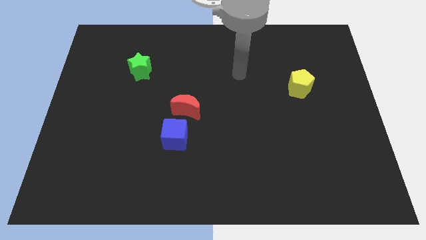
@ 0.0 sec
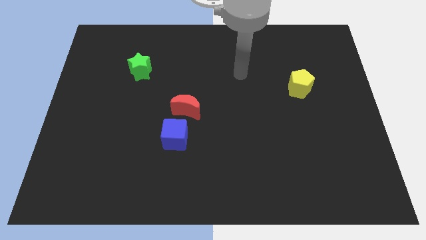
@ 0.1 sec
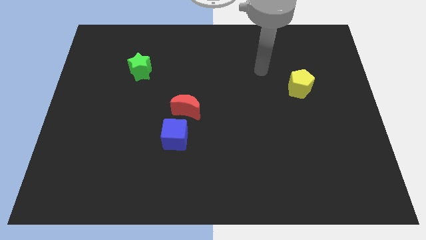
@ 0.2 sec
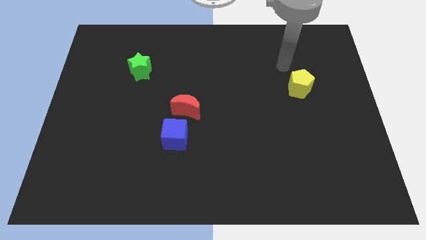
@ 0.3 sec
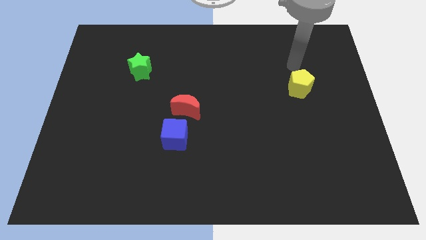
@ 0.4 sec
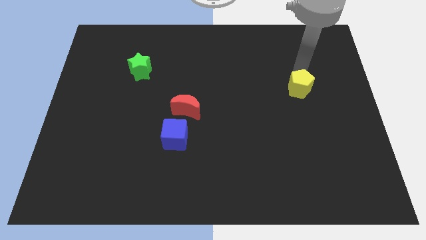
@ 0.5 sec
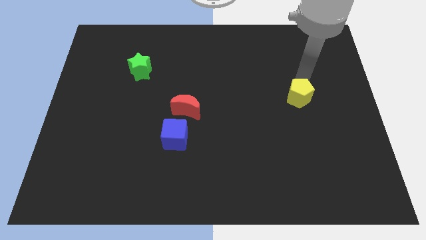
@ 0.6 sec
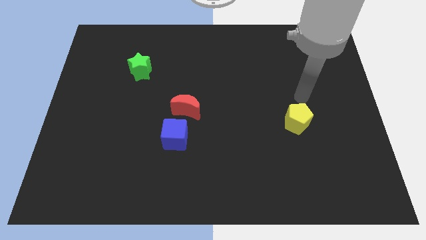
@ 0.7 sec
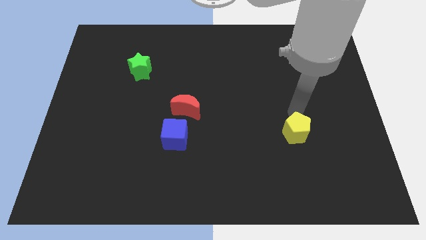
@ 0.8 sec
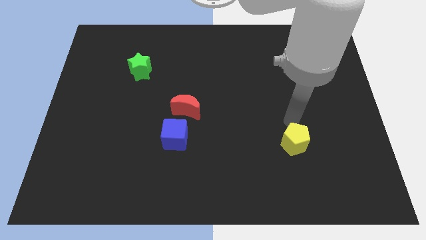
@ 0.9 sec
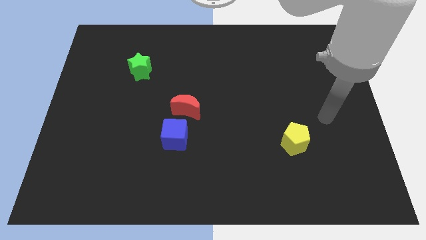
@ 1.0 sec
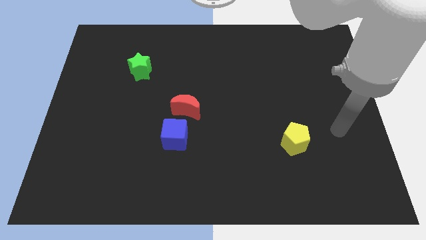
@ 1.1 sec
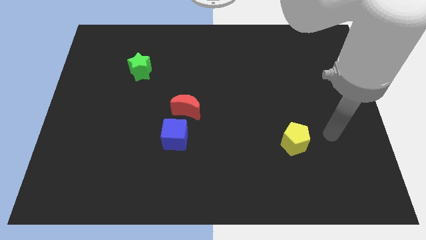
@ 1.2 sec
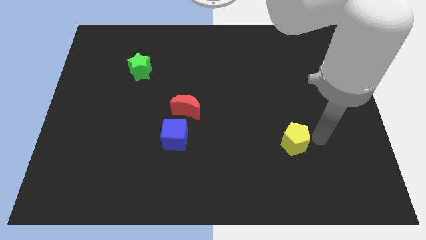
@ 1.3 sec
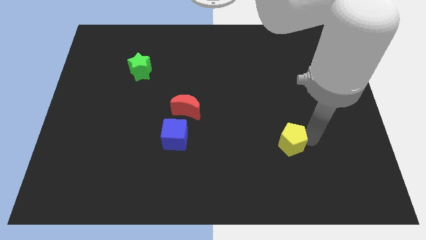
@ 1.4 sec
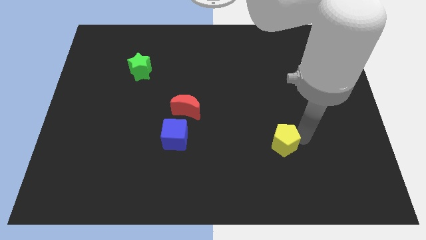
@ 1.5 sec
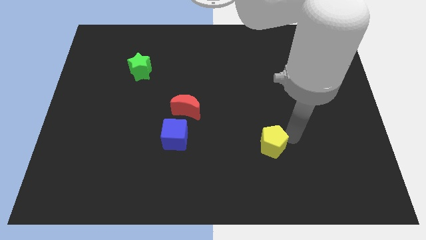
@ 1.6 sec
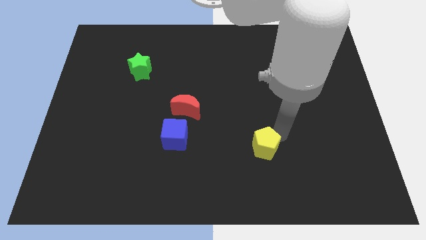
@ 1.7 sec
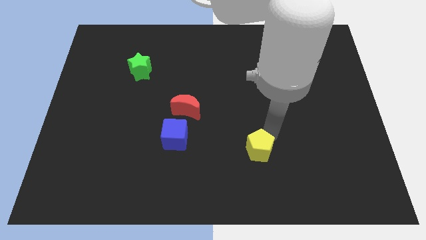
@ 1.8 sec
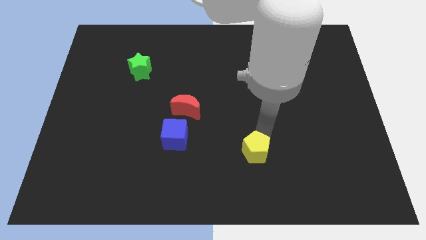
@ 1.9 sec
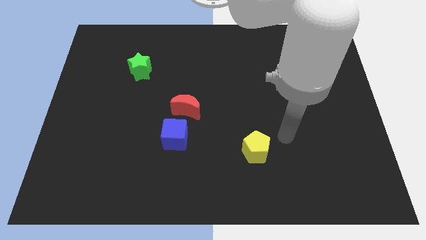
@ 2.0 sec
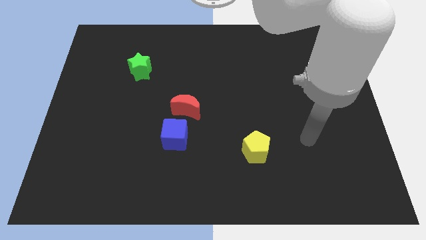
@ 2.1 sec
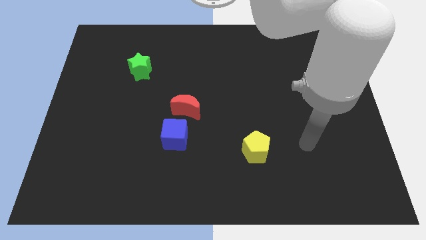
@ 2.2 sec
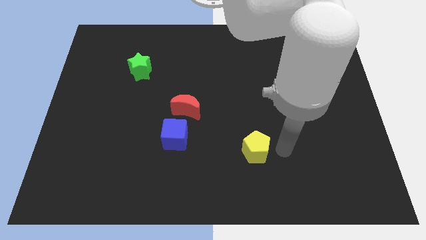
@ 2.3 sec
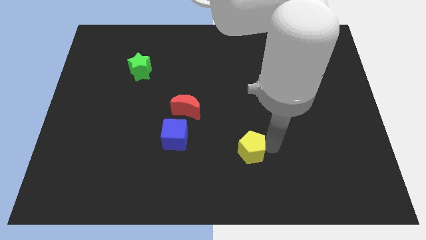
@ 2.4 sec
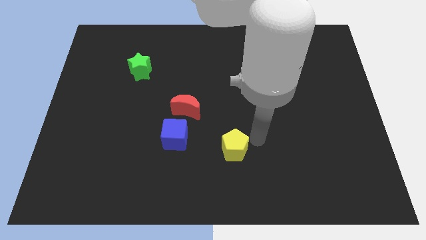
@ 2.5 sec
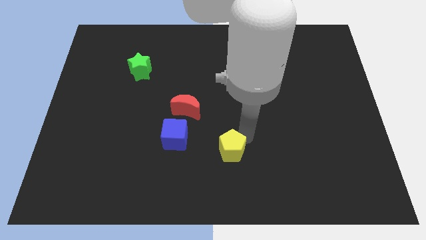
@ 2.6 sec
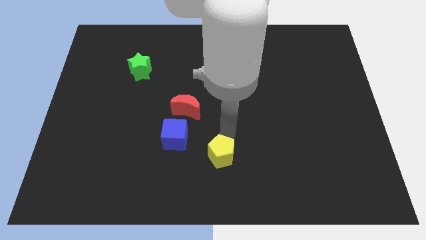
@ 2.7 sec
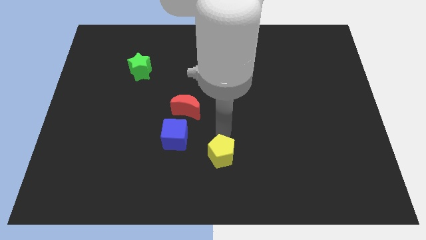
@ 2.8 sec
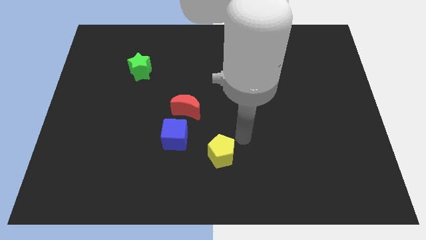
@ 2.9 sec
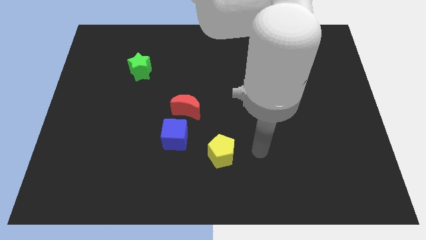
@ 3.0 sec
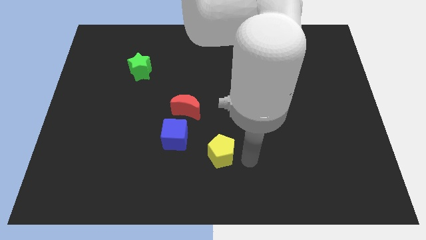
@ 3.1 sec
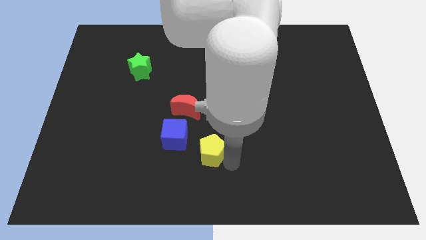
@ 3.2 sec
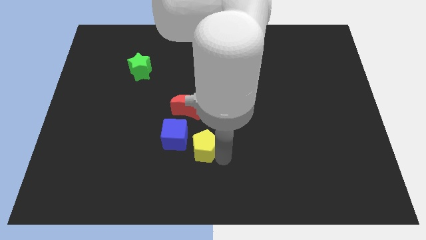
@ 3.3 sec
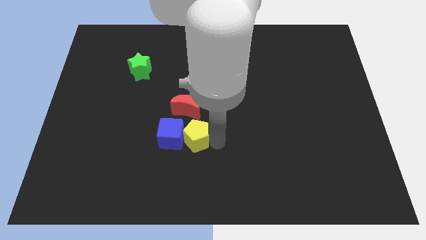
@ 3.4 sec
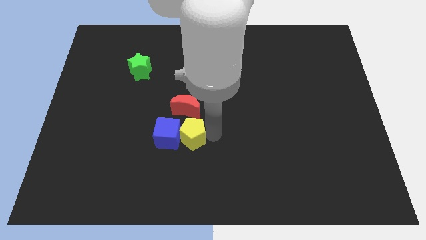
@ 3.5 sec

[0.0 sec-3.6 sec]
put the pentagon towards the blue cube

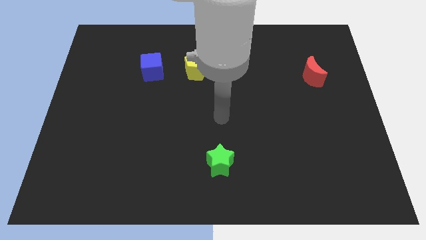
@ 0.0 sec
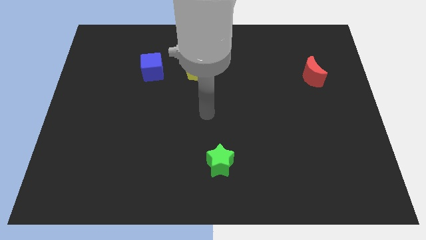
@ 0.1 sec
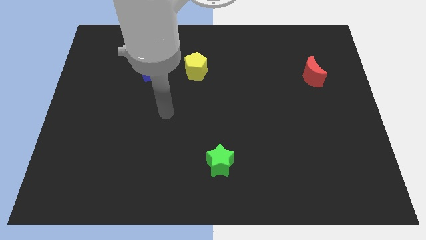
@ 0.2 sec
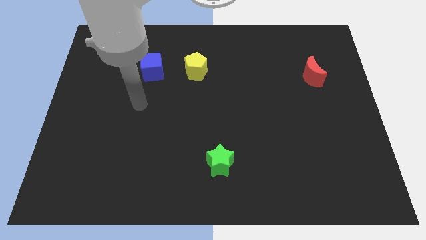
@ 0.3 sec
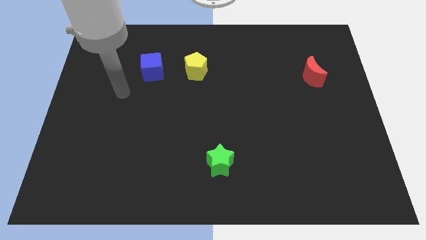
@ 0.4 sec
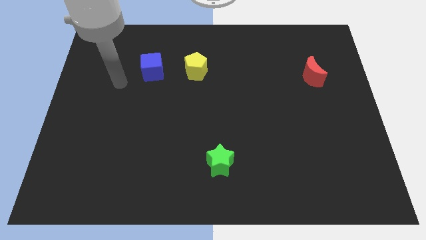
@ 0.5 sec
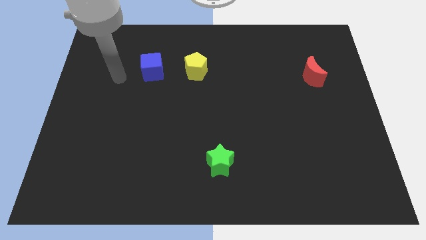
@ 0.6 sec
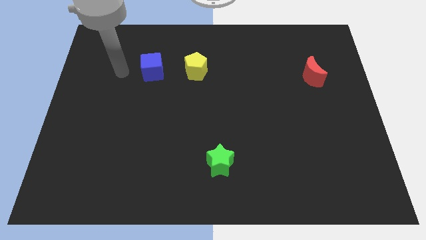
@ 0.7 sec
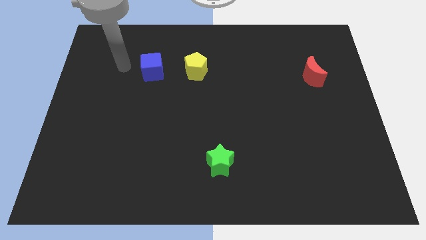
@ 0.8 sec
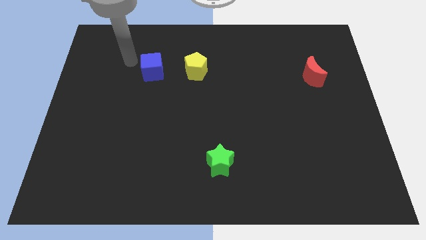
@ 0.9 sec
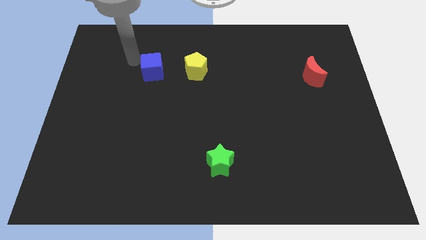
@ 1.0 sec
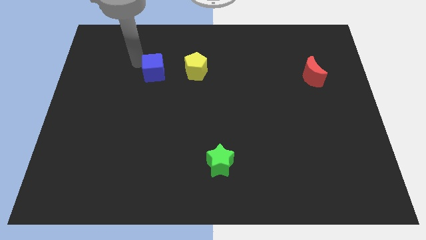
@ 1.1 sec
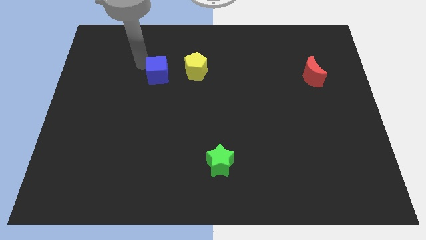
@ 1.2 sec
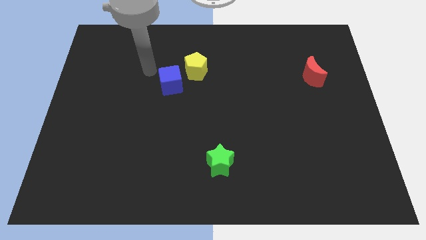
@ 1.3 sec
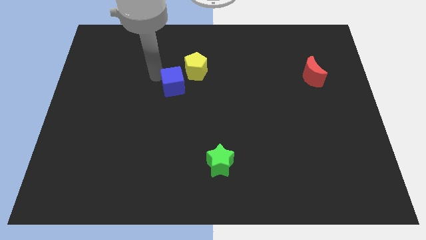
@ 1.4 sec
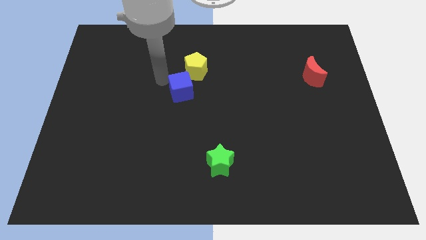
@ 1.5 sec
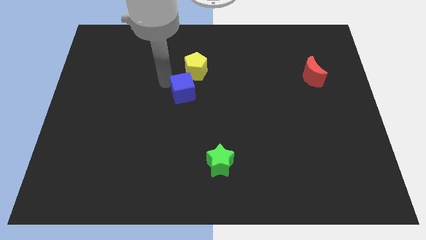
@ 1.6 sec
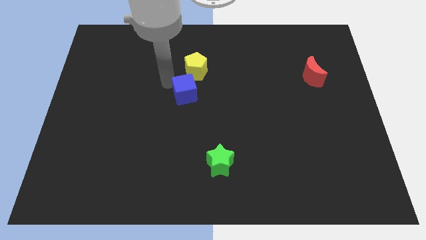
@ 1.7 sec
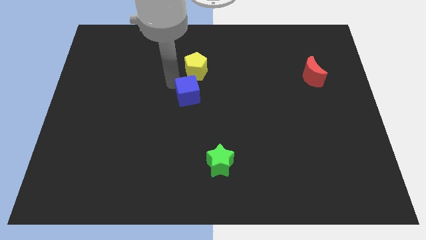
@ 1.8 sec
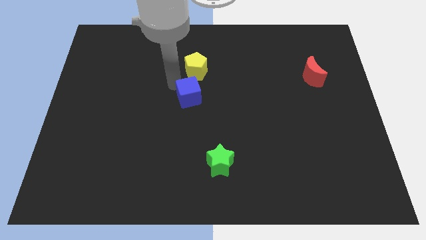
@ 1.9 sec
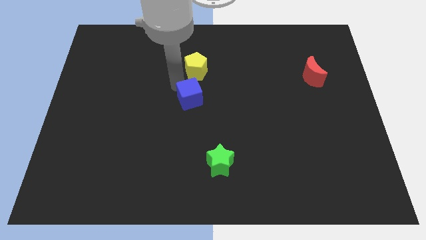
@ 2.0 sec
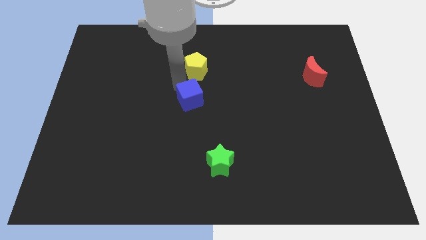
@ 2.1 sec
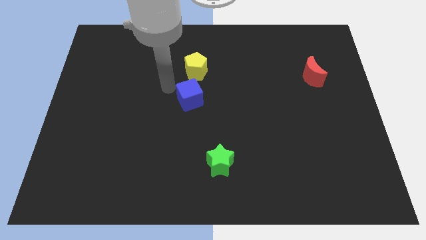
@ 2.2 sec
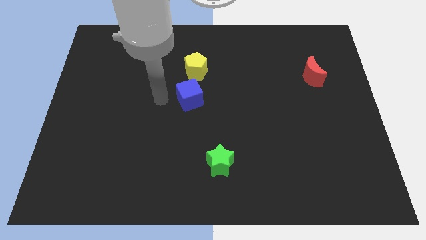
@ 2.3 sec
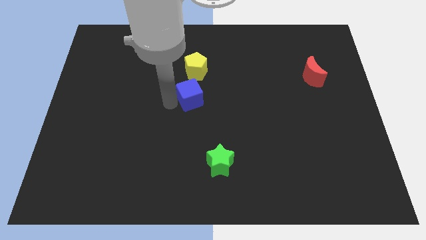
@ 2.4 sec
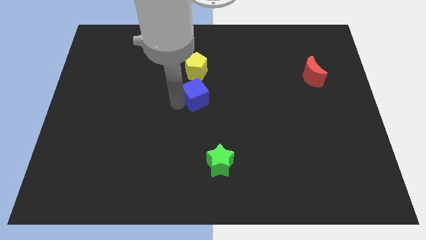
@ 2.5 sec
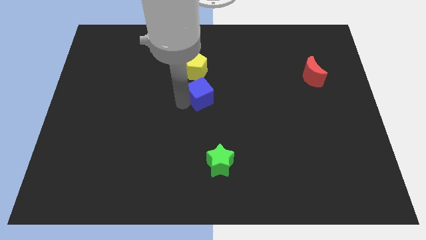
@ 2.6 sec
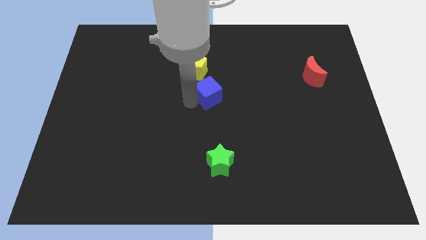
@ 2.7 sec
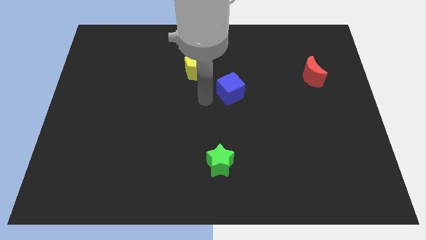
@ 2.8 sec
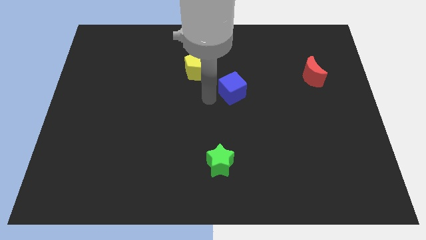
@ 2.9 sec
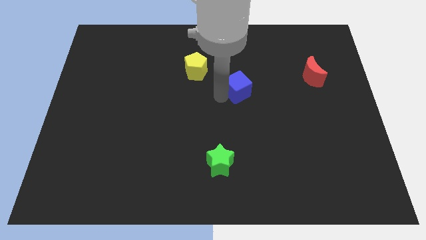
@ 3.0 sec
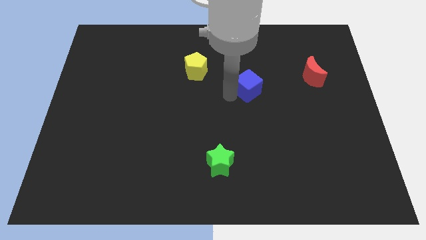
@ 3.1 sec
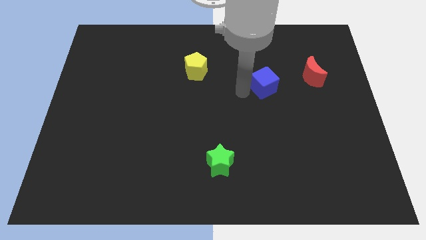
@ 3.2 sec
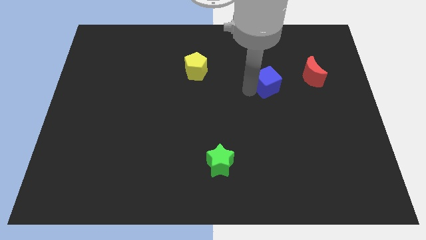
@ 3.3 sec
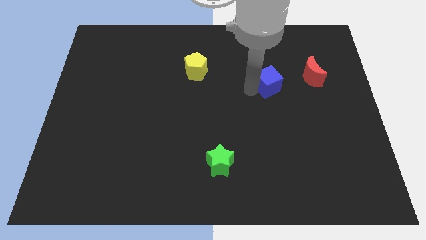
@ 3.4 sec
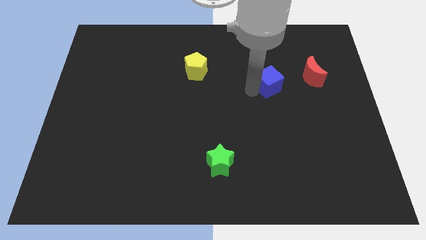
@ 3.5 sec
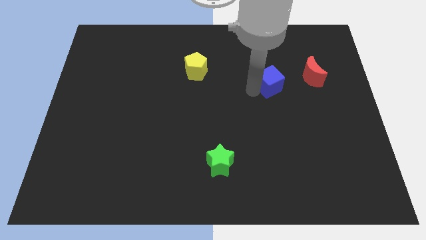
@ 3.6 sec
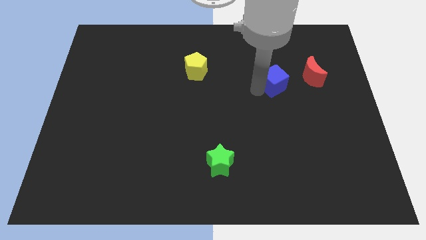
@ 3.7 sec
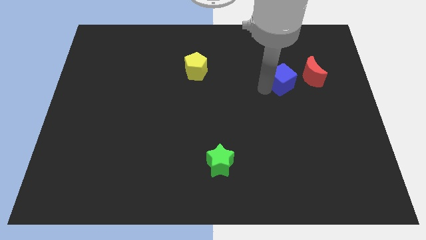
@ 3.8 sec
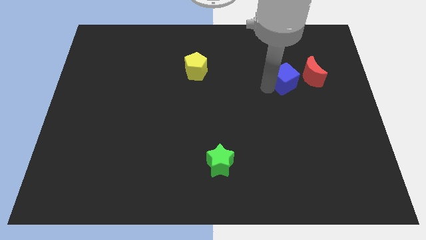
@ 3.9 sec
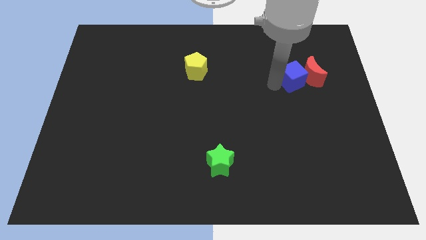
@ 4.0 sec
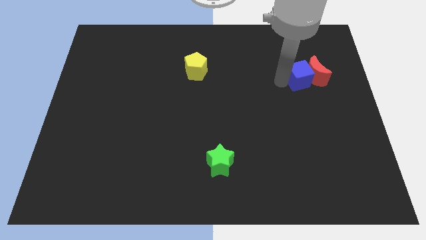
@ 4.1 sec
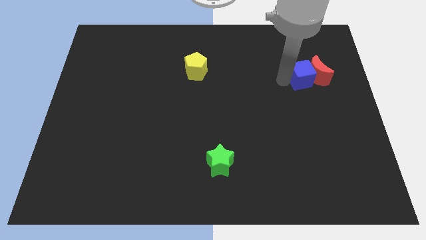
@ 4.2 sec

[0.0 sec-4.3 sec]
move the cube close to the red moon
